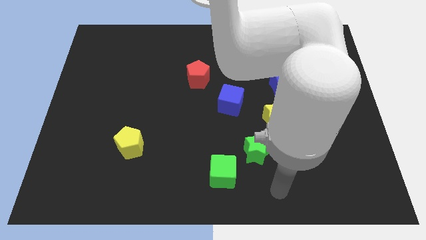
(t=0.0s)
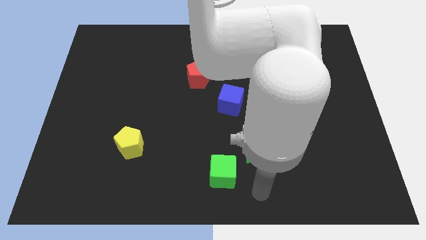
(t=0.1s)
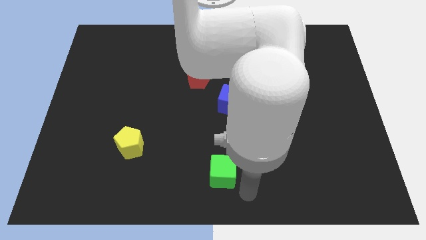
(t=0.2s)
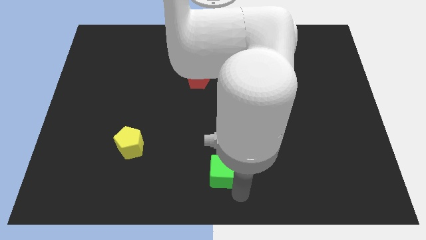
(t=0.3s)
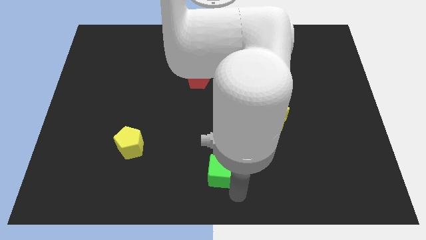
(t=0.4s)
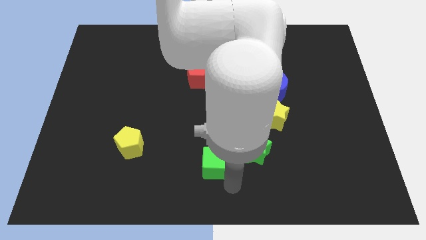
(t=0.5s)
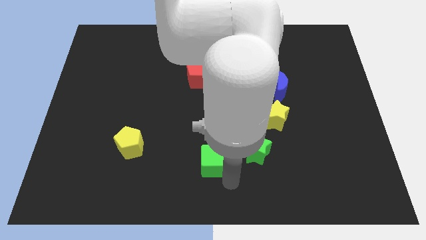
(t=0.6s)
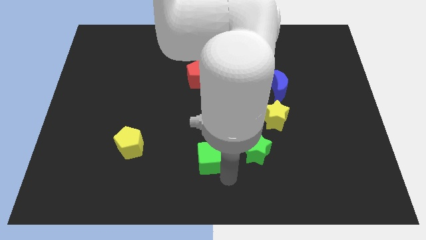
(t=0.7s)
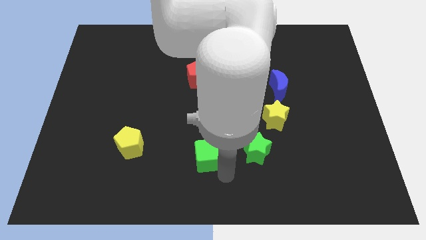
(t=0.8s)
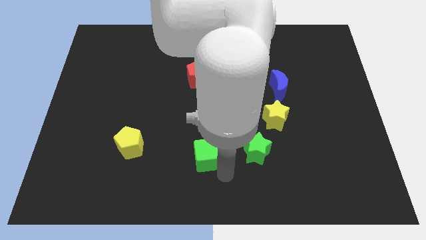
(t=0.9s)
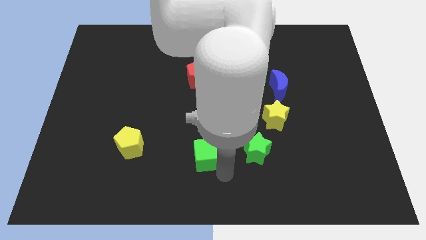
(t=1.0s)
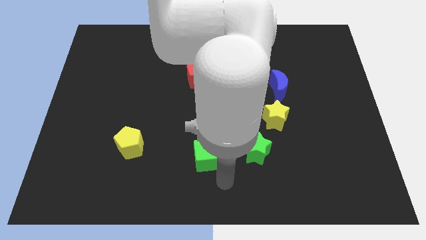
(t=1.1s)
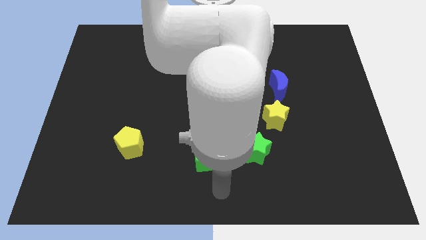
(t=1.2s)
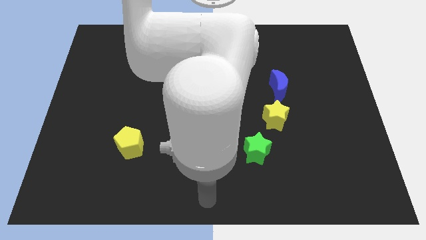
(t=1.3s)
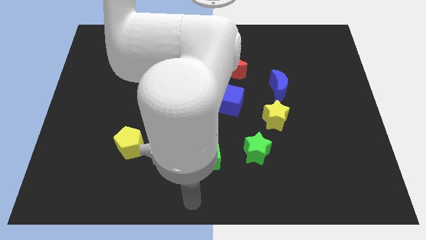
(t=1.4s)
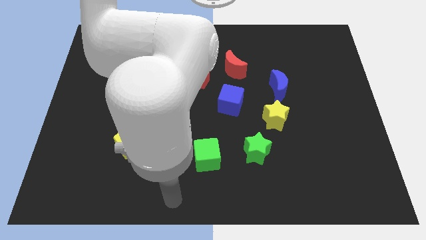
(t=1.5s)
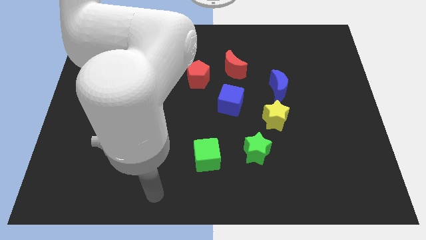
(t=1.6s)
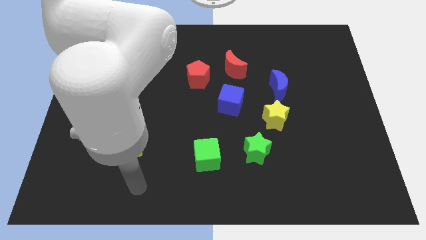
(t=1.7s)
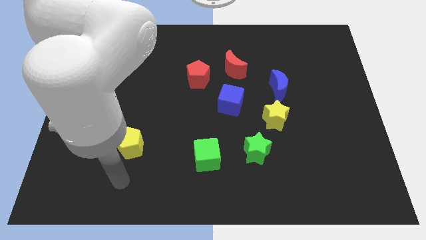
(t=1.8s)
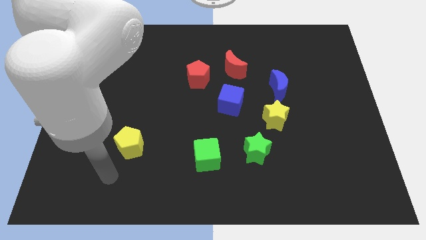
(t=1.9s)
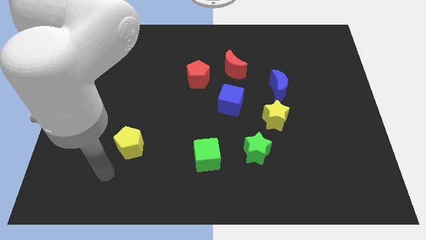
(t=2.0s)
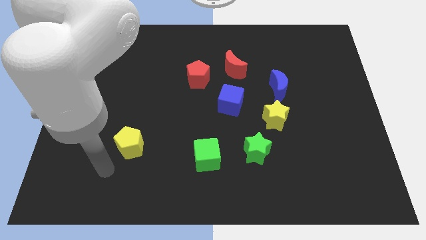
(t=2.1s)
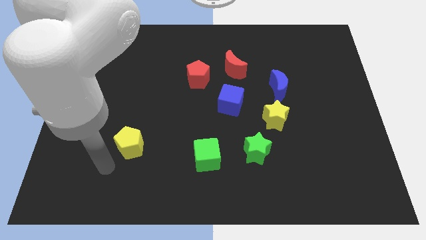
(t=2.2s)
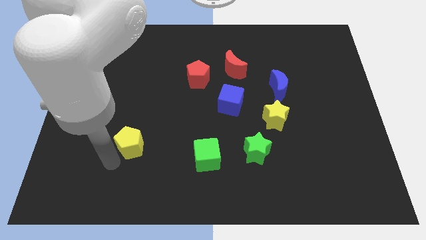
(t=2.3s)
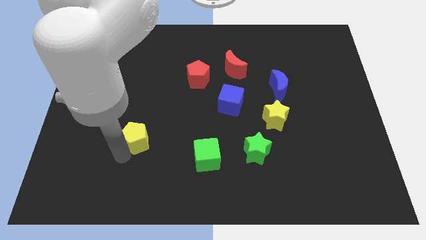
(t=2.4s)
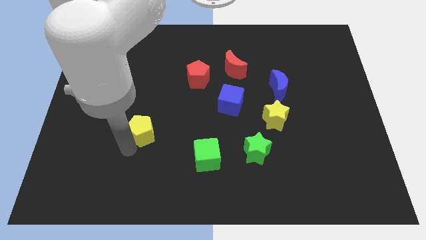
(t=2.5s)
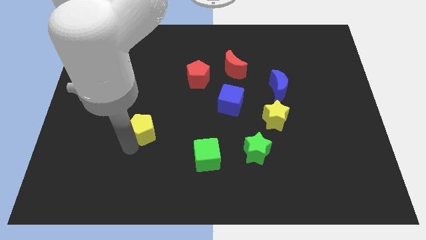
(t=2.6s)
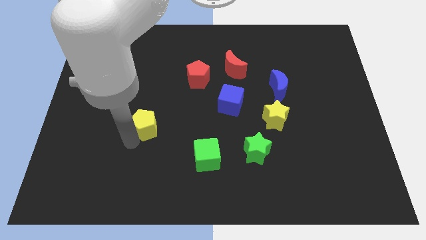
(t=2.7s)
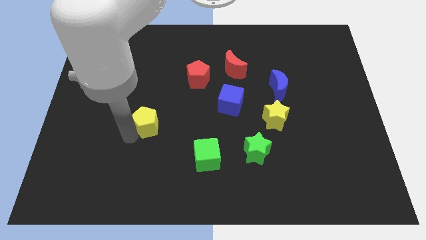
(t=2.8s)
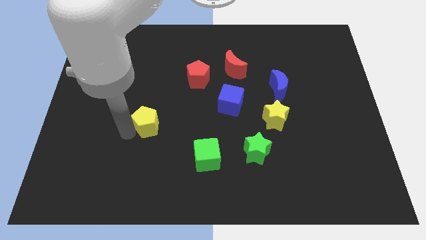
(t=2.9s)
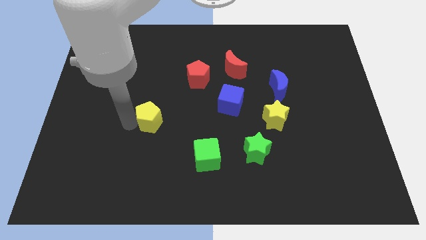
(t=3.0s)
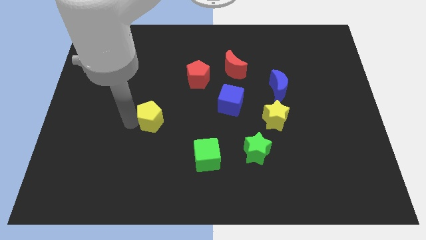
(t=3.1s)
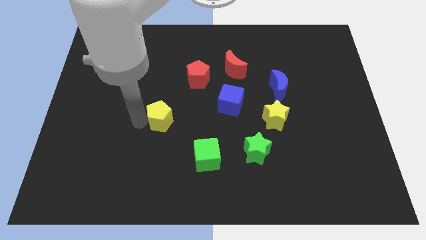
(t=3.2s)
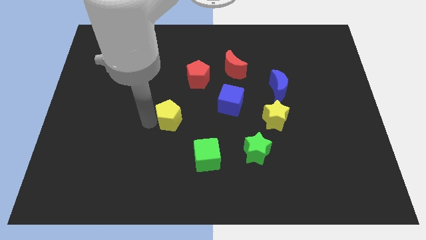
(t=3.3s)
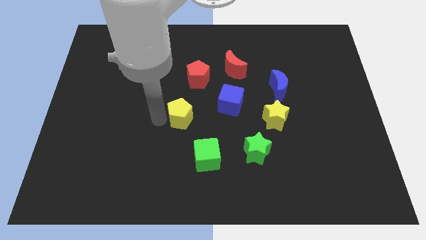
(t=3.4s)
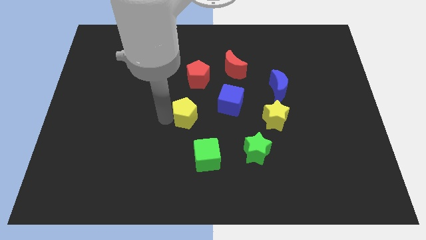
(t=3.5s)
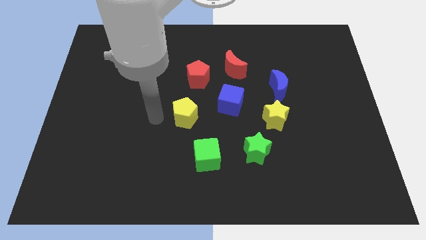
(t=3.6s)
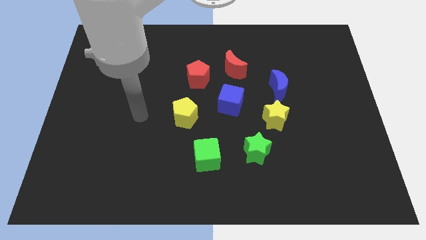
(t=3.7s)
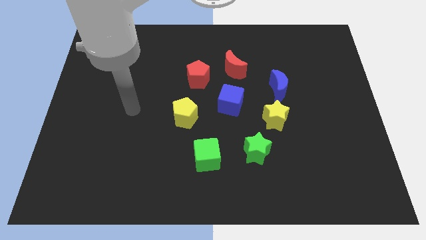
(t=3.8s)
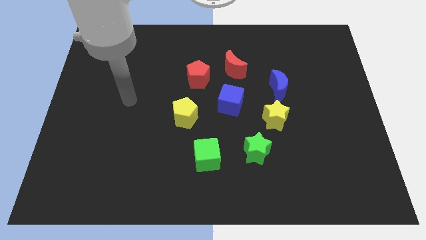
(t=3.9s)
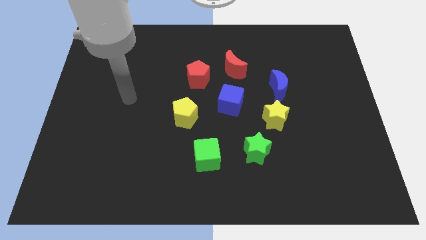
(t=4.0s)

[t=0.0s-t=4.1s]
push the green cube towards the left side of the green star

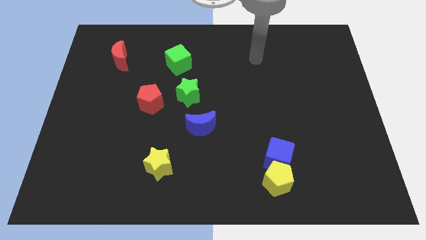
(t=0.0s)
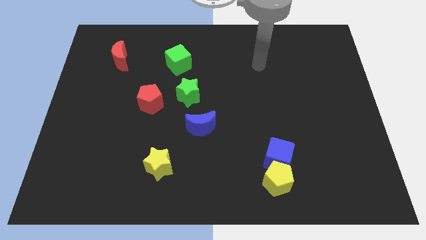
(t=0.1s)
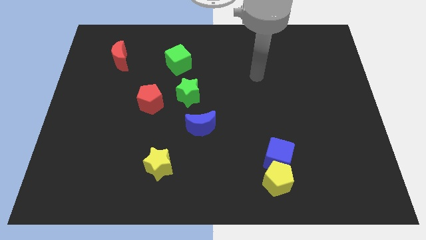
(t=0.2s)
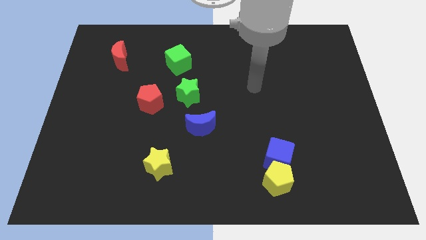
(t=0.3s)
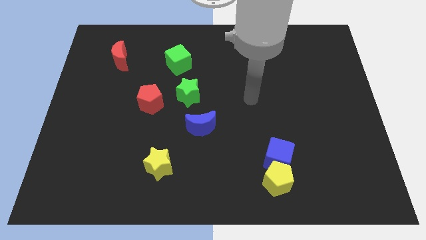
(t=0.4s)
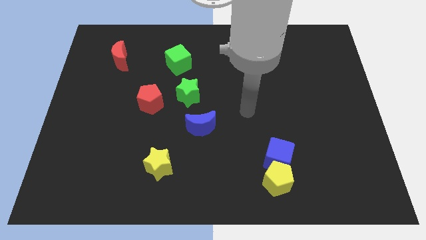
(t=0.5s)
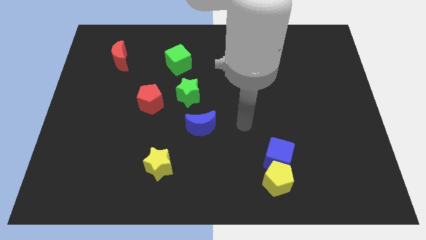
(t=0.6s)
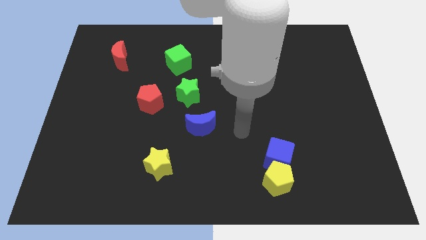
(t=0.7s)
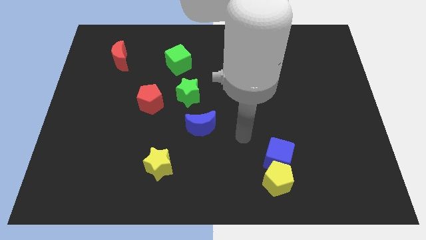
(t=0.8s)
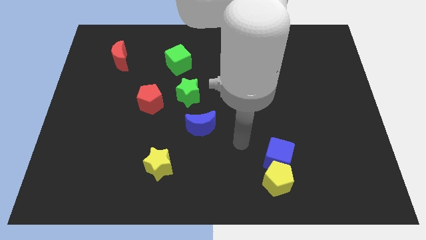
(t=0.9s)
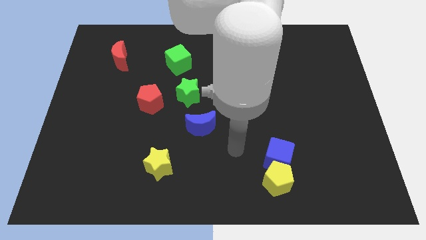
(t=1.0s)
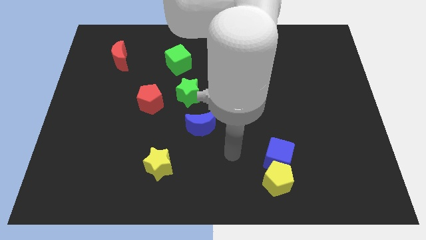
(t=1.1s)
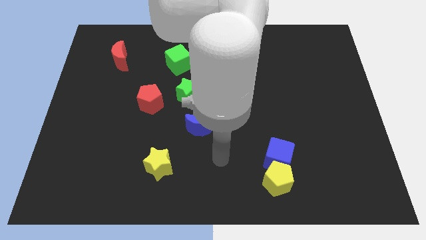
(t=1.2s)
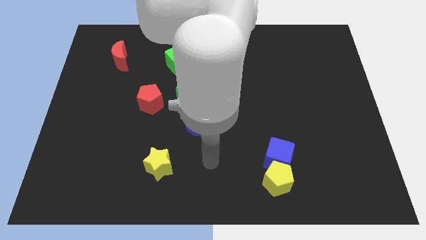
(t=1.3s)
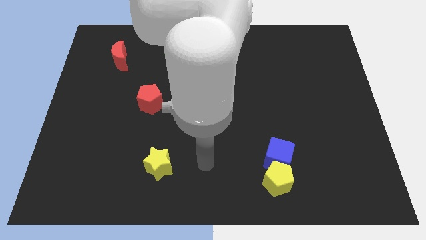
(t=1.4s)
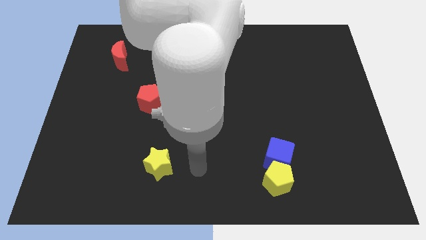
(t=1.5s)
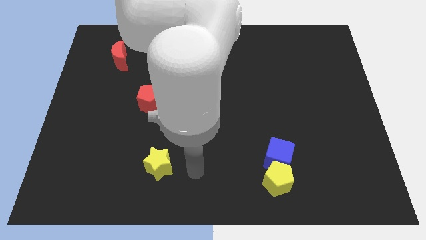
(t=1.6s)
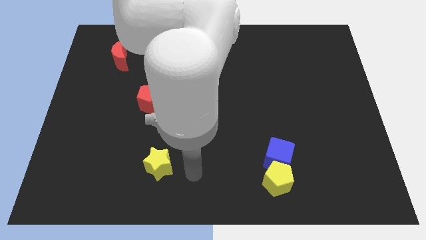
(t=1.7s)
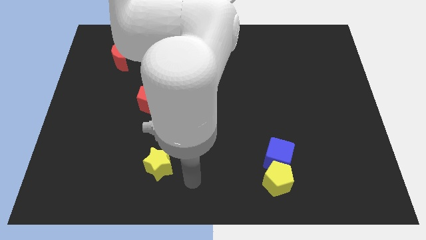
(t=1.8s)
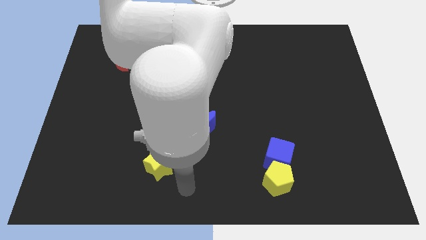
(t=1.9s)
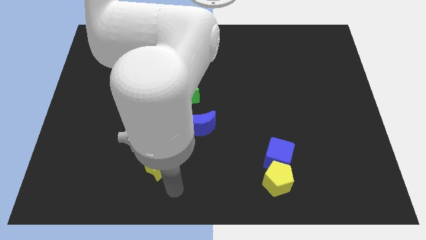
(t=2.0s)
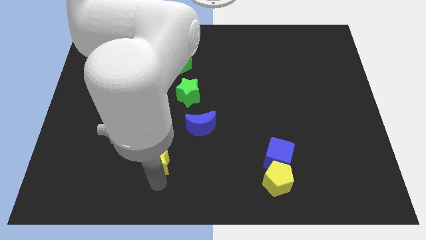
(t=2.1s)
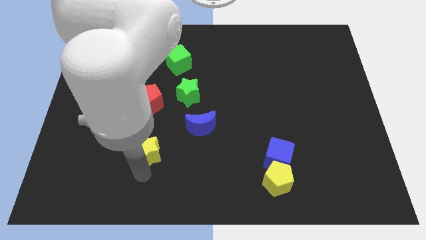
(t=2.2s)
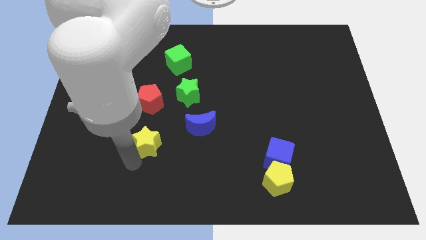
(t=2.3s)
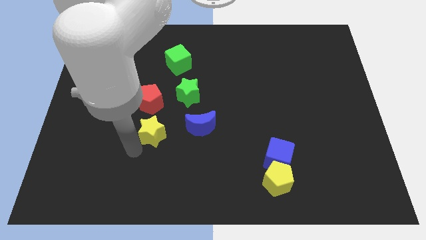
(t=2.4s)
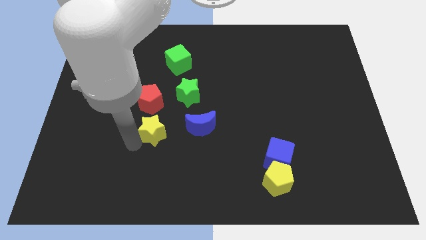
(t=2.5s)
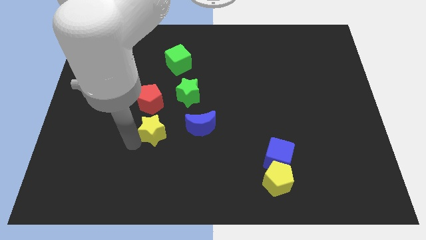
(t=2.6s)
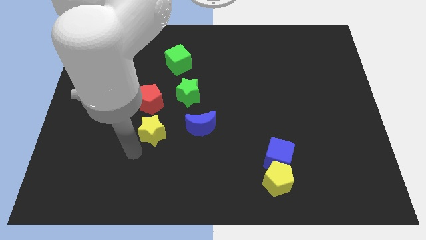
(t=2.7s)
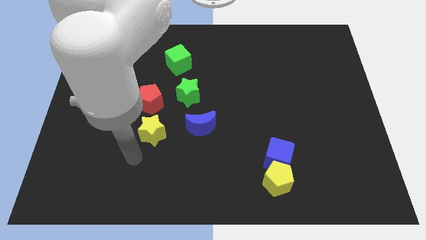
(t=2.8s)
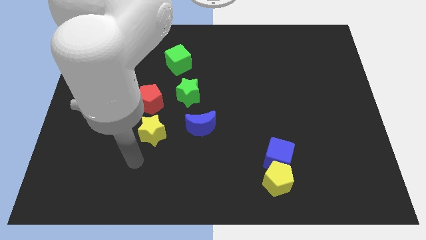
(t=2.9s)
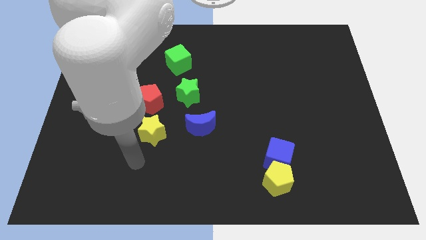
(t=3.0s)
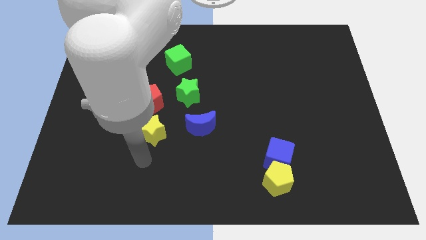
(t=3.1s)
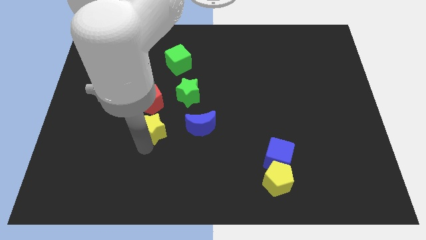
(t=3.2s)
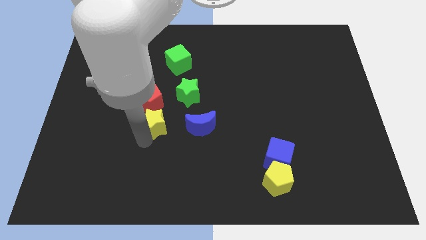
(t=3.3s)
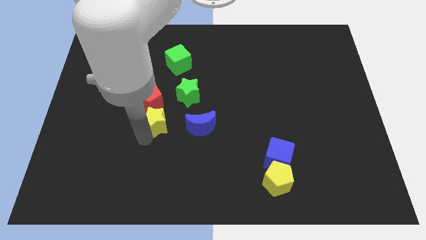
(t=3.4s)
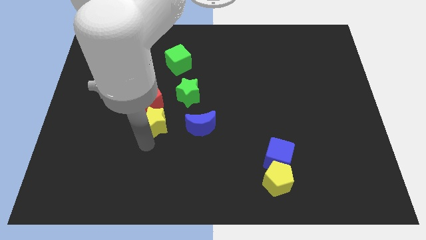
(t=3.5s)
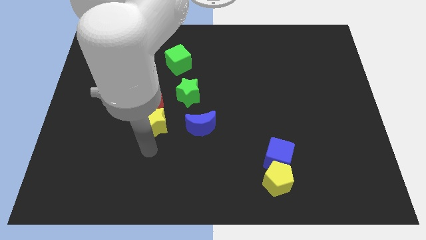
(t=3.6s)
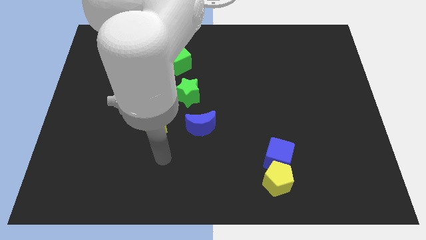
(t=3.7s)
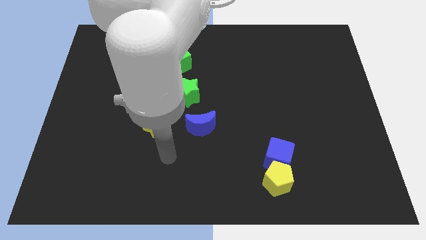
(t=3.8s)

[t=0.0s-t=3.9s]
move the yellow star to the bottom of the red pentagon

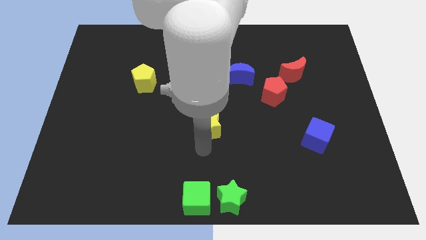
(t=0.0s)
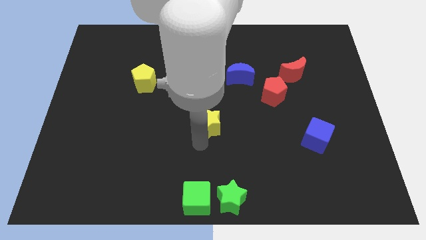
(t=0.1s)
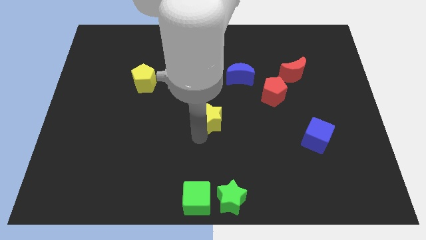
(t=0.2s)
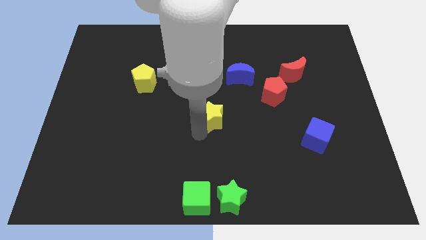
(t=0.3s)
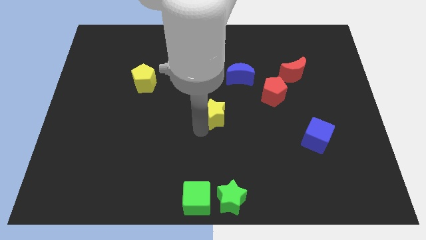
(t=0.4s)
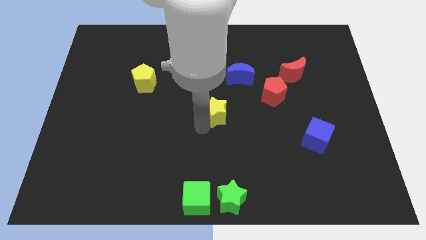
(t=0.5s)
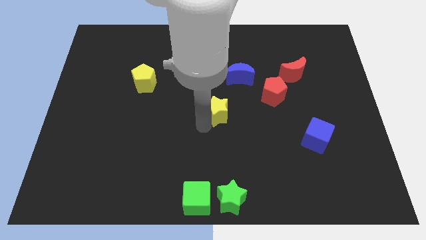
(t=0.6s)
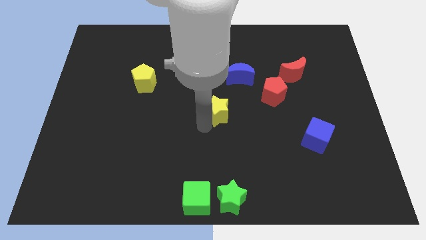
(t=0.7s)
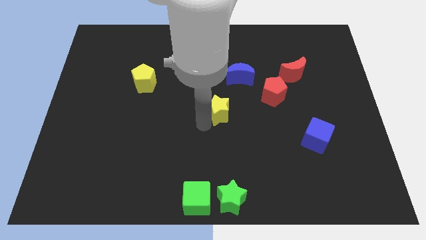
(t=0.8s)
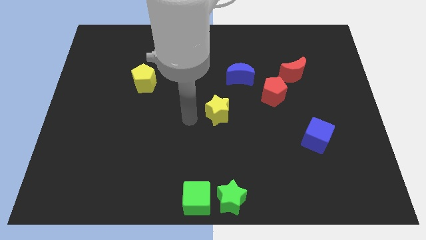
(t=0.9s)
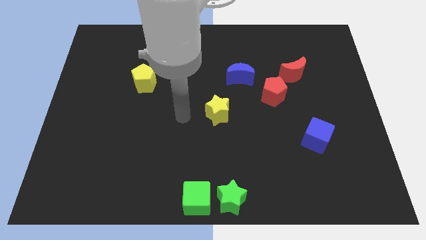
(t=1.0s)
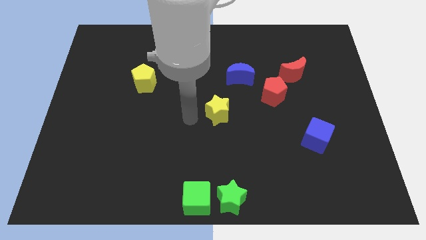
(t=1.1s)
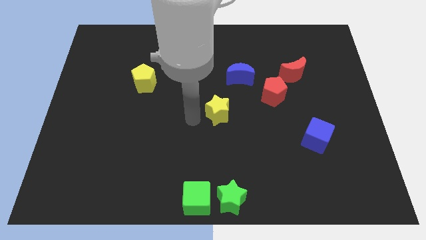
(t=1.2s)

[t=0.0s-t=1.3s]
place the yellow star to the center
